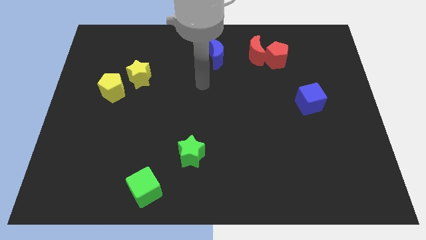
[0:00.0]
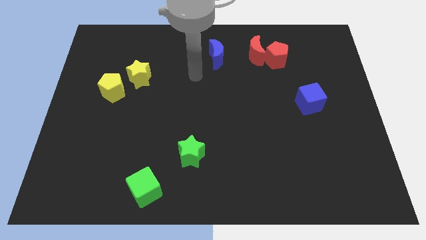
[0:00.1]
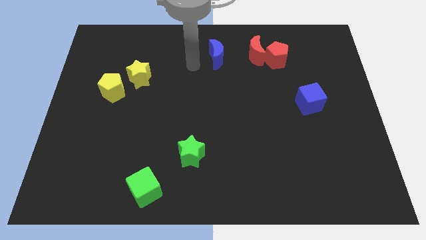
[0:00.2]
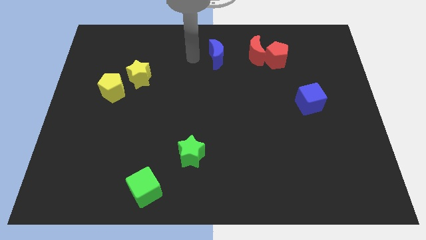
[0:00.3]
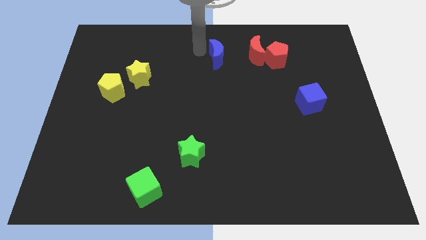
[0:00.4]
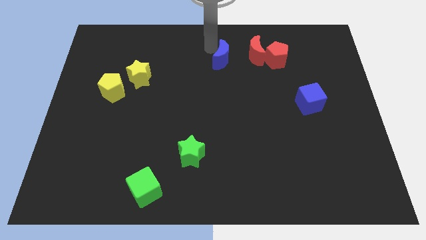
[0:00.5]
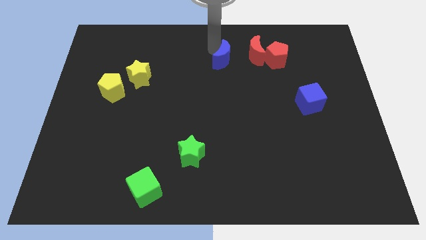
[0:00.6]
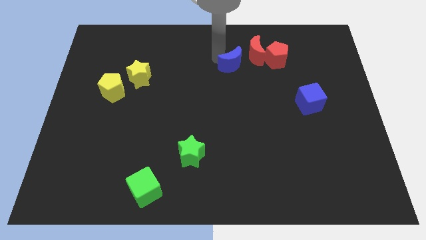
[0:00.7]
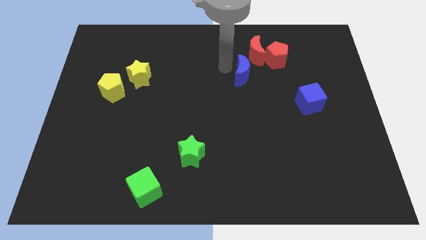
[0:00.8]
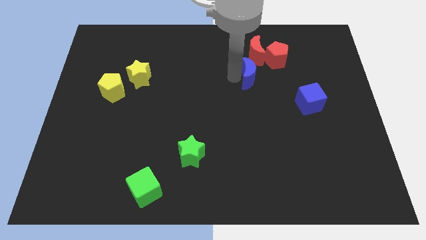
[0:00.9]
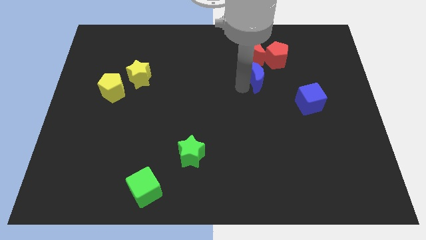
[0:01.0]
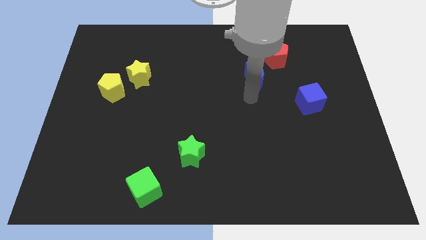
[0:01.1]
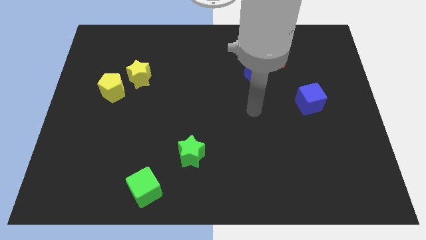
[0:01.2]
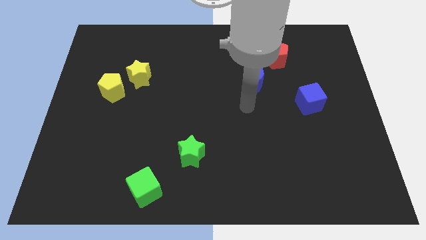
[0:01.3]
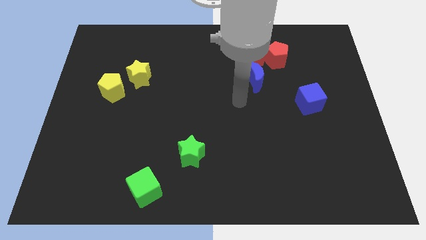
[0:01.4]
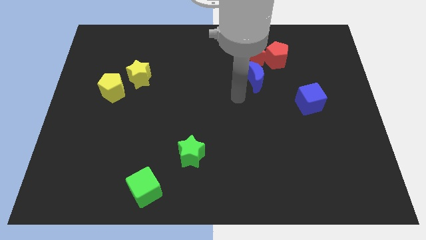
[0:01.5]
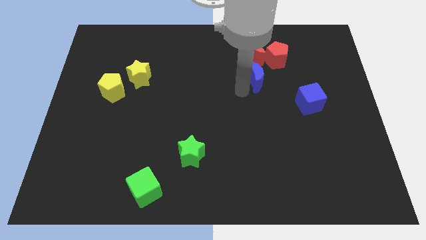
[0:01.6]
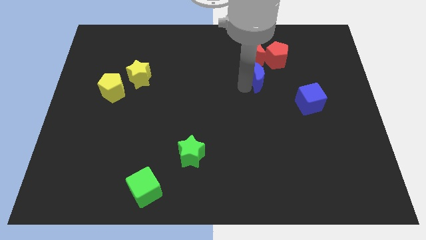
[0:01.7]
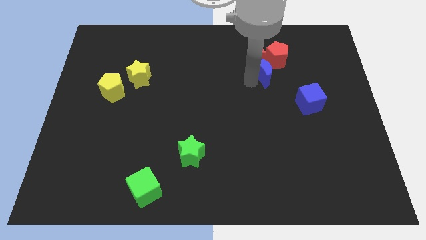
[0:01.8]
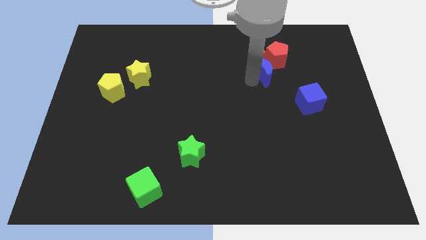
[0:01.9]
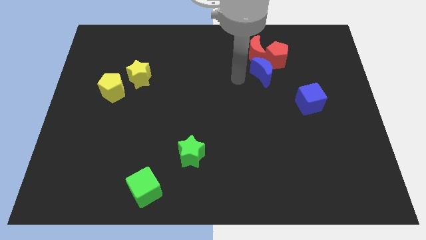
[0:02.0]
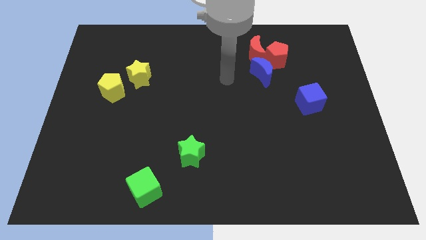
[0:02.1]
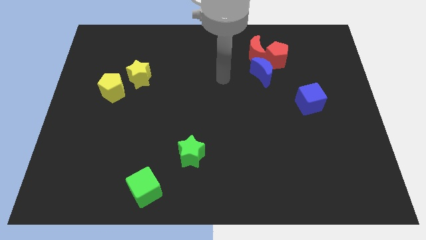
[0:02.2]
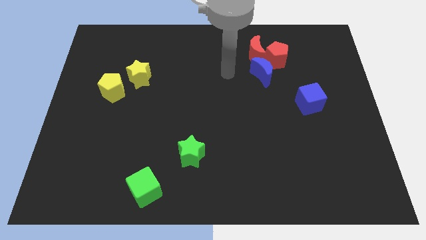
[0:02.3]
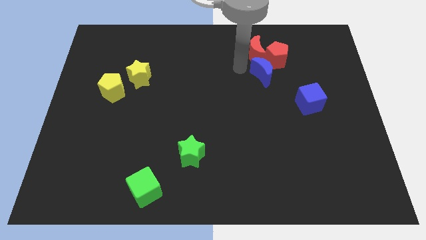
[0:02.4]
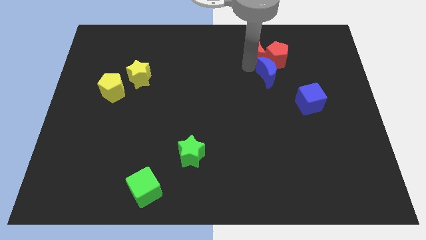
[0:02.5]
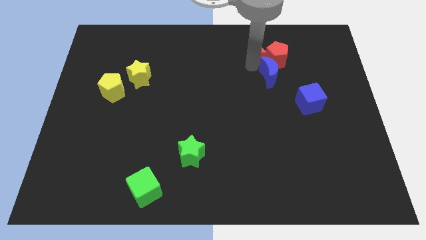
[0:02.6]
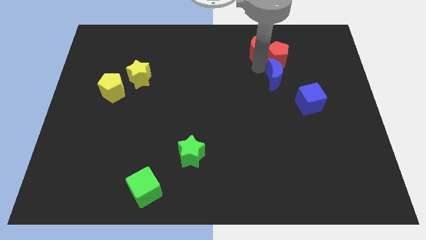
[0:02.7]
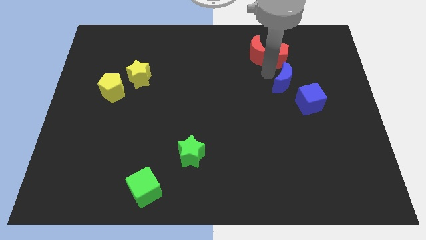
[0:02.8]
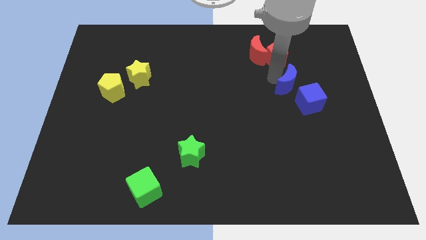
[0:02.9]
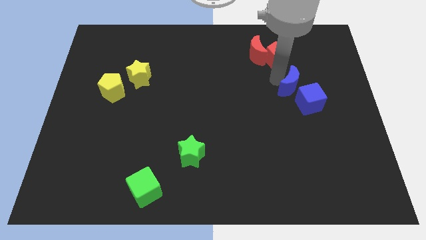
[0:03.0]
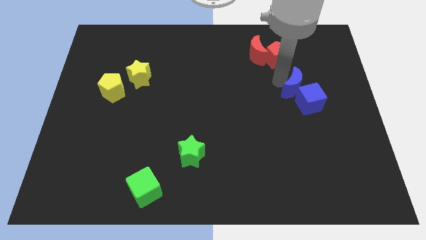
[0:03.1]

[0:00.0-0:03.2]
put the blue moon below the red pentagon

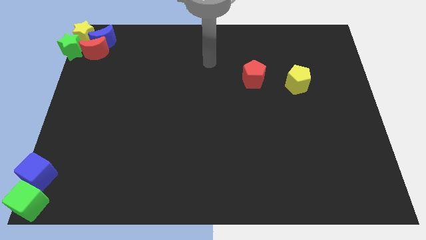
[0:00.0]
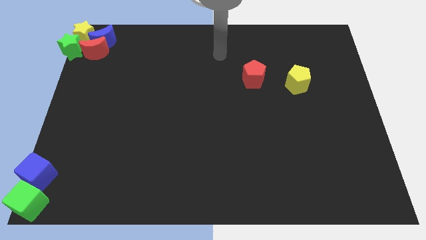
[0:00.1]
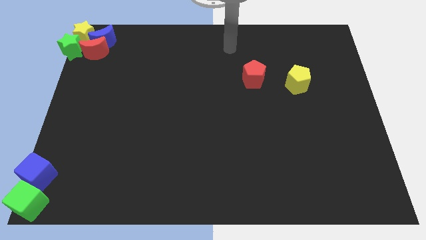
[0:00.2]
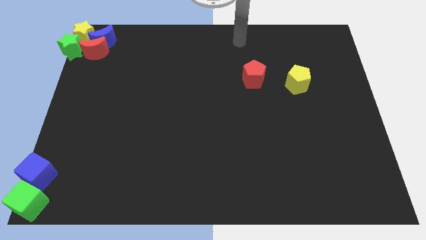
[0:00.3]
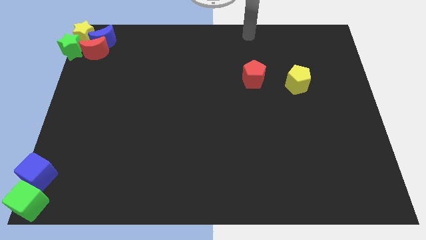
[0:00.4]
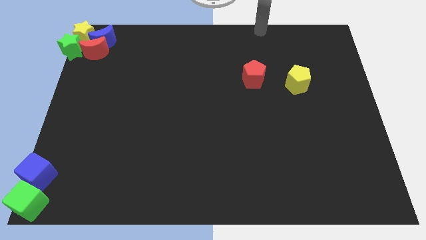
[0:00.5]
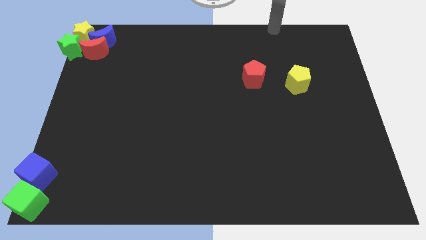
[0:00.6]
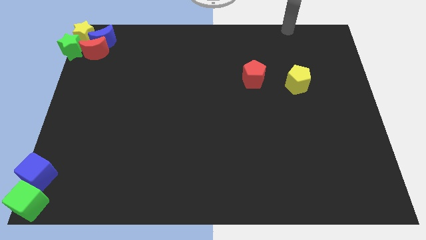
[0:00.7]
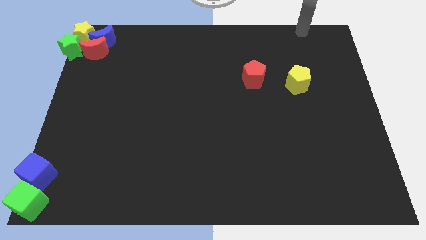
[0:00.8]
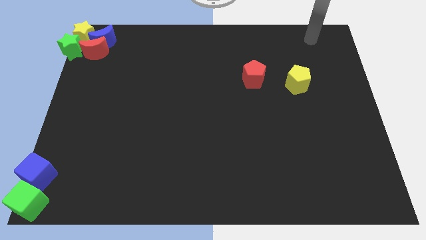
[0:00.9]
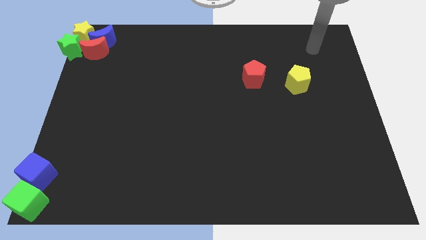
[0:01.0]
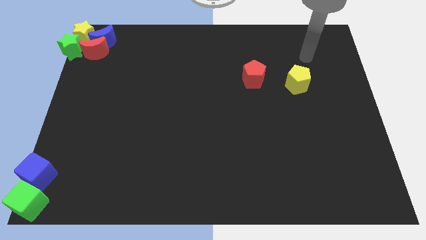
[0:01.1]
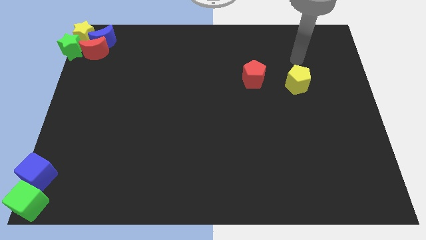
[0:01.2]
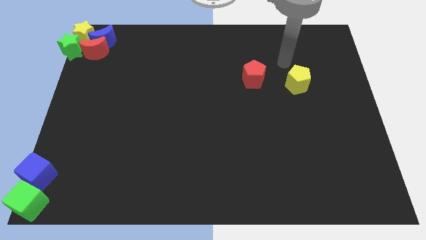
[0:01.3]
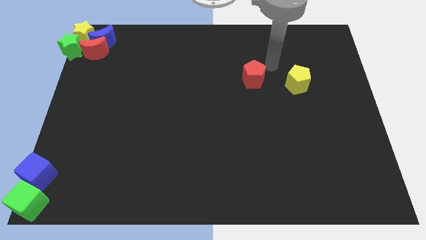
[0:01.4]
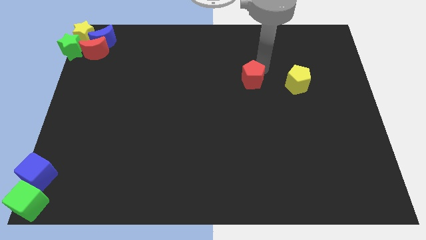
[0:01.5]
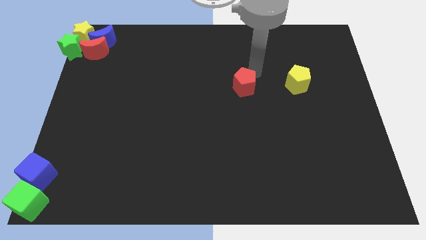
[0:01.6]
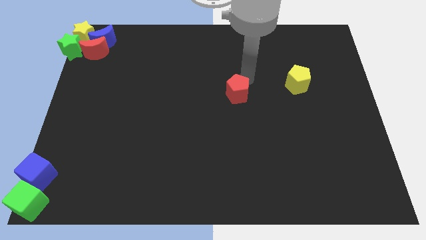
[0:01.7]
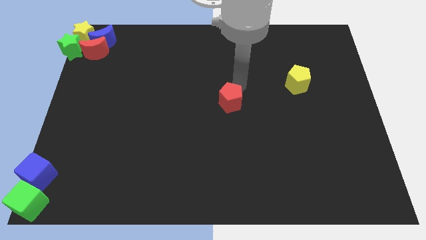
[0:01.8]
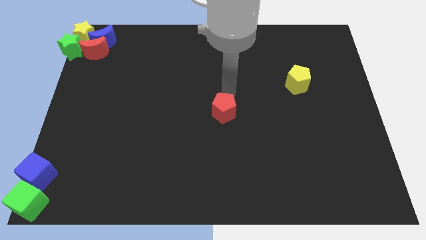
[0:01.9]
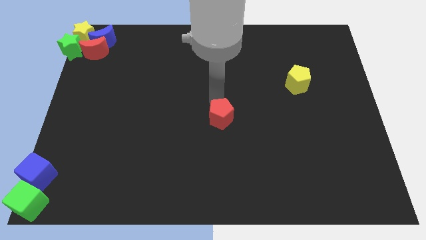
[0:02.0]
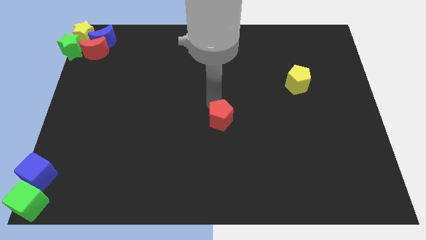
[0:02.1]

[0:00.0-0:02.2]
push the red pentagon towards the centre of board

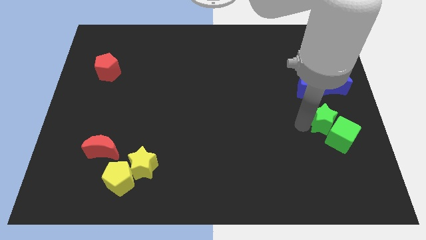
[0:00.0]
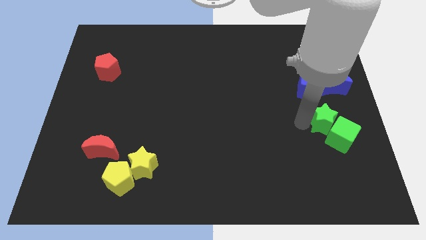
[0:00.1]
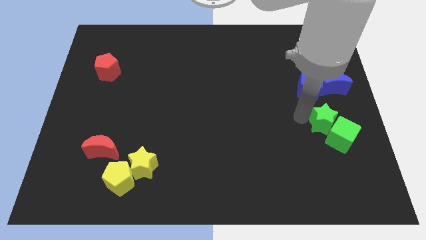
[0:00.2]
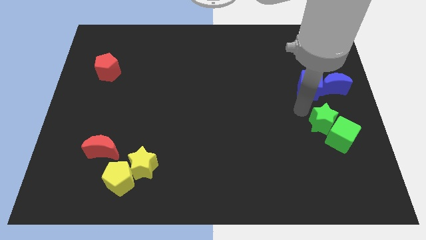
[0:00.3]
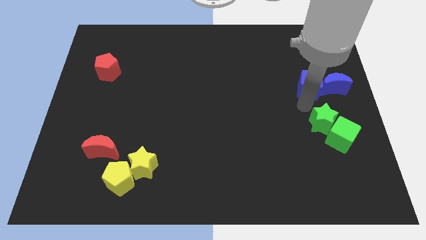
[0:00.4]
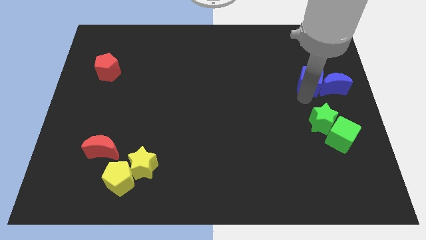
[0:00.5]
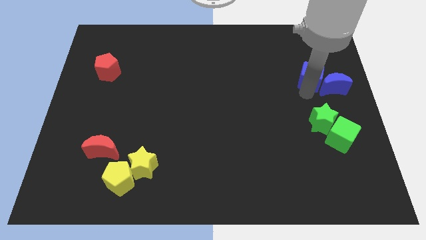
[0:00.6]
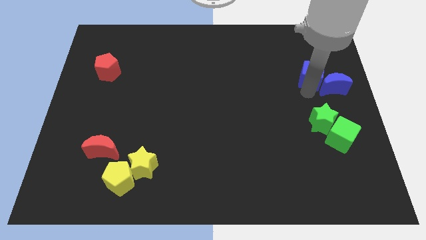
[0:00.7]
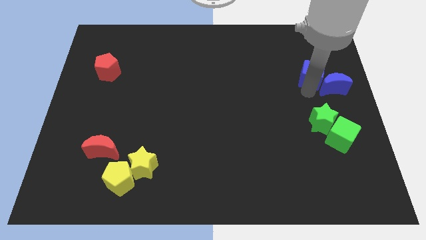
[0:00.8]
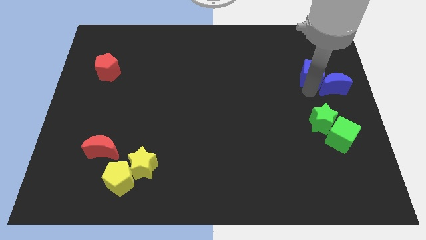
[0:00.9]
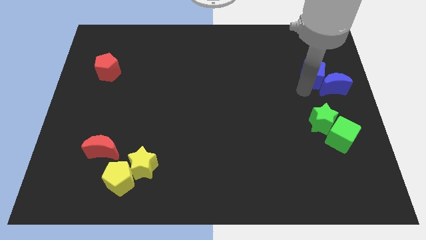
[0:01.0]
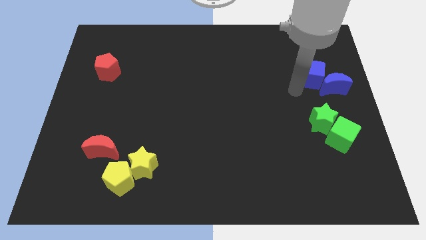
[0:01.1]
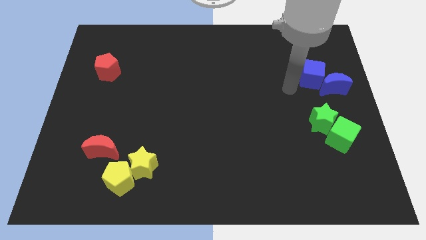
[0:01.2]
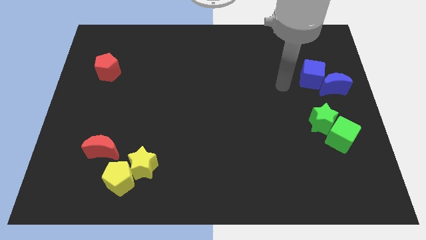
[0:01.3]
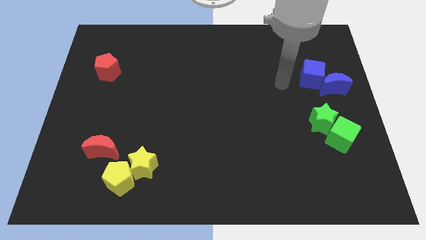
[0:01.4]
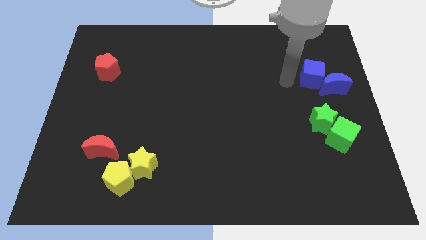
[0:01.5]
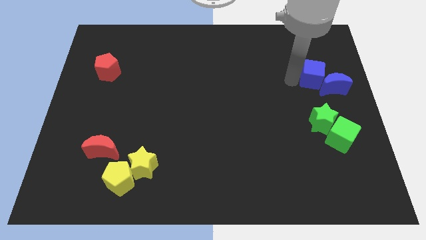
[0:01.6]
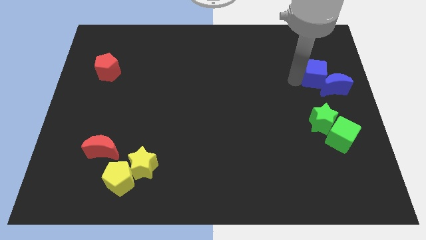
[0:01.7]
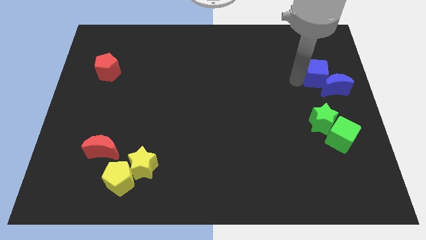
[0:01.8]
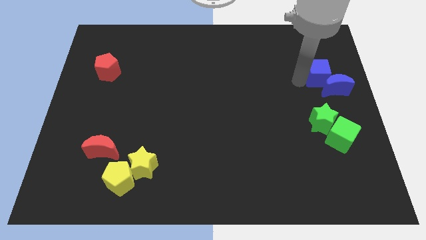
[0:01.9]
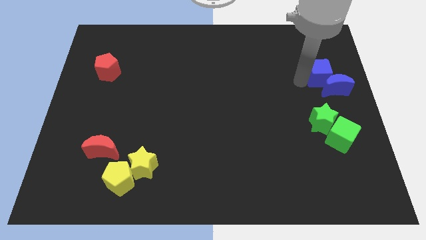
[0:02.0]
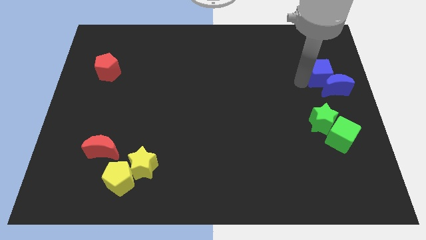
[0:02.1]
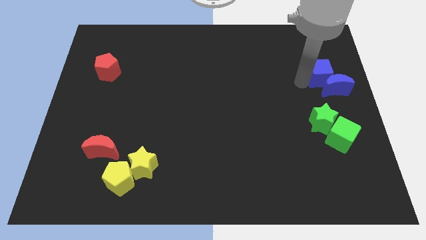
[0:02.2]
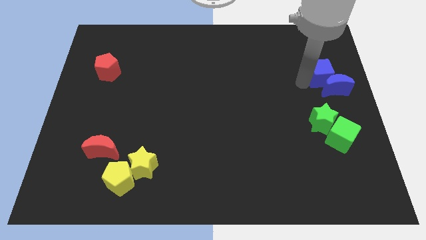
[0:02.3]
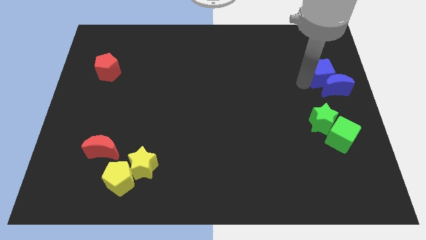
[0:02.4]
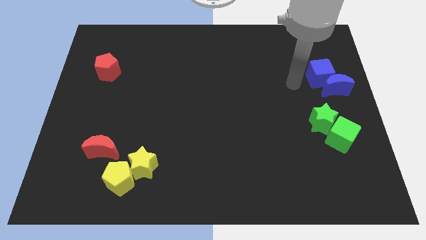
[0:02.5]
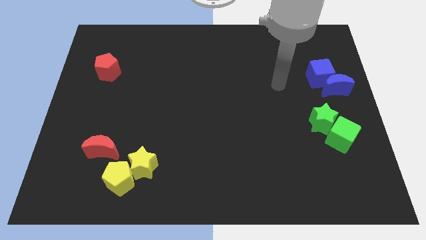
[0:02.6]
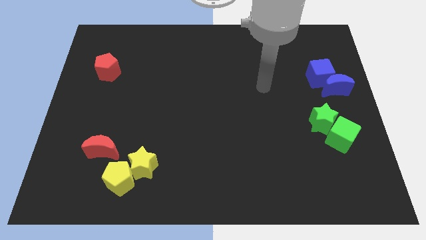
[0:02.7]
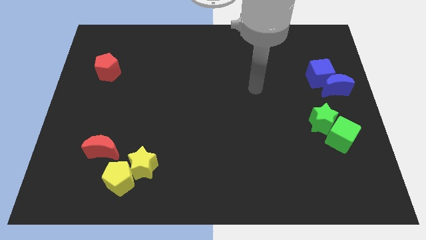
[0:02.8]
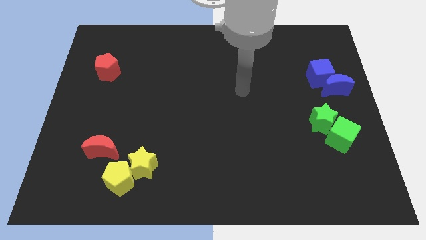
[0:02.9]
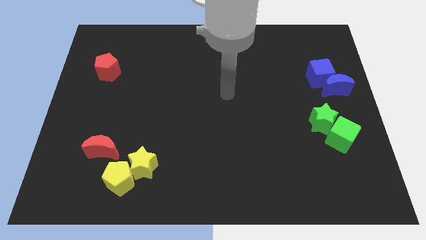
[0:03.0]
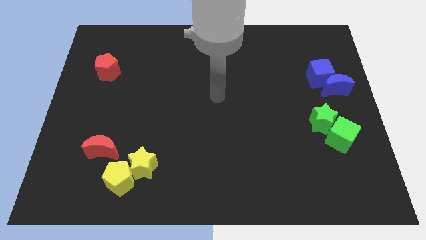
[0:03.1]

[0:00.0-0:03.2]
push the blue cube to the top of the blue crescent

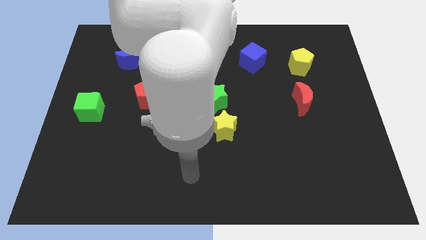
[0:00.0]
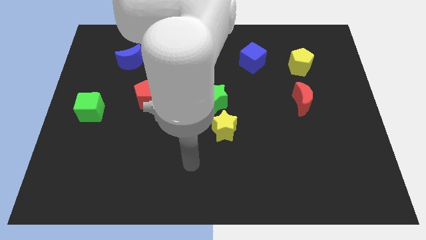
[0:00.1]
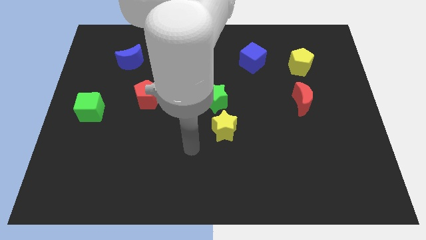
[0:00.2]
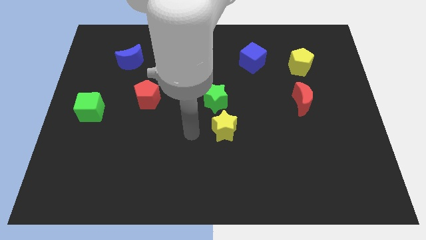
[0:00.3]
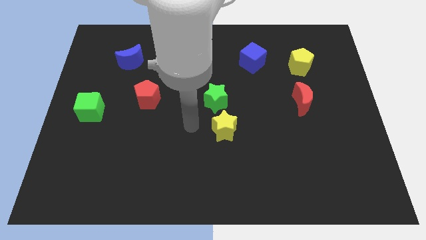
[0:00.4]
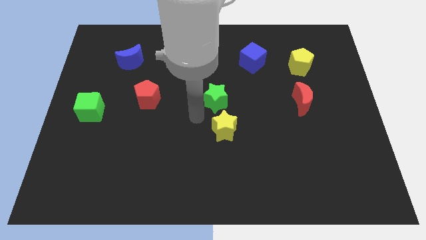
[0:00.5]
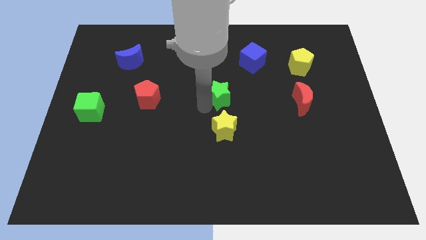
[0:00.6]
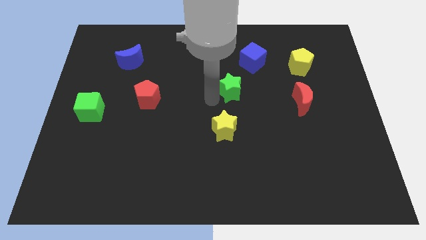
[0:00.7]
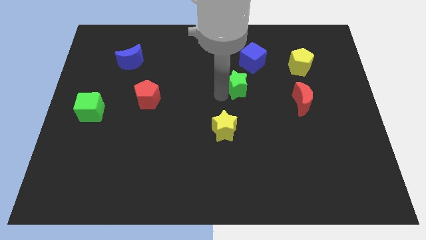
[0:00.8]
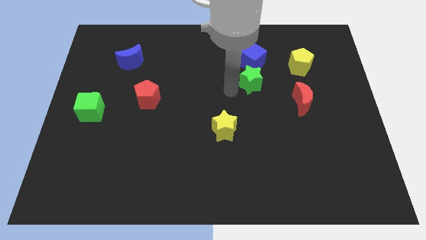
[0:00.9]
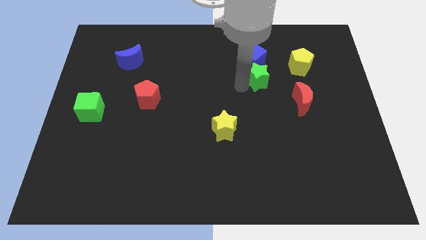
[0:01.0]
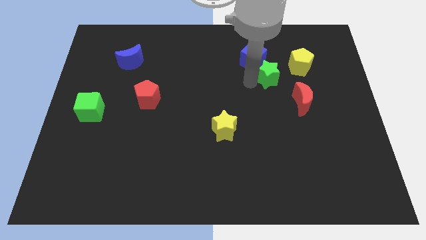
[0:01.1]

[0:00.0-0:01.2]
put the green star underneath the blue cube
